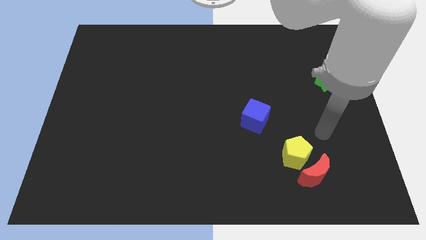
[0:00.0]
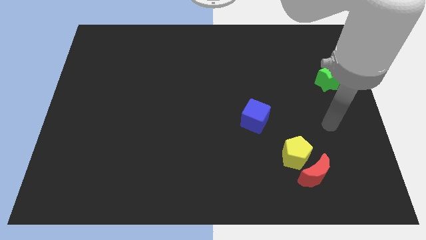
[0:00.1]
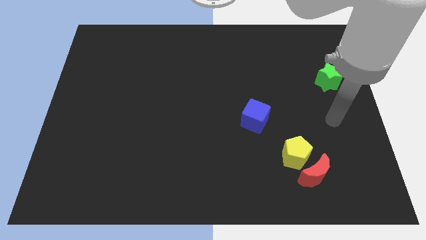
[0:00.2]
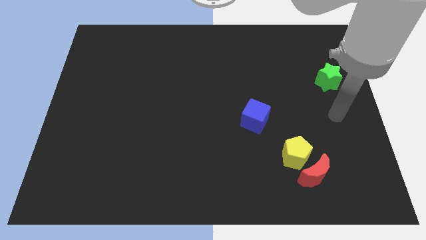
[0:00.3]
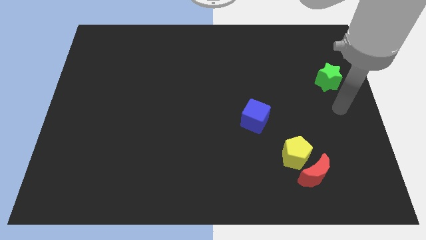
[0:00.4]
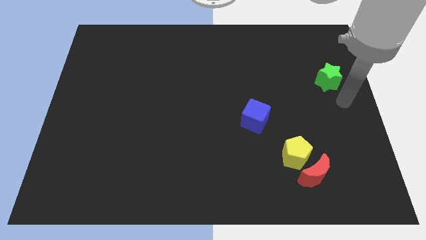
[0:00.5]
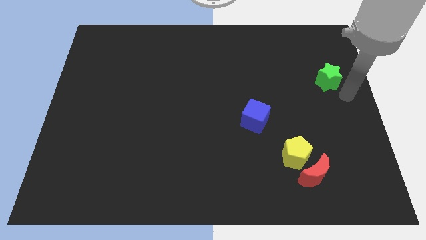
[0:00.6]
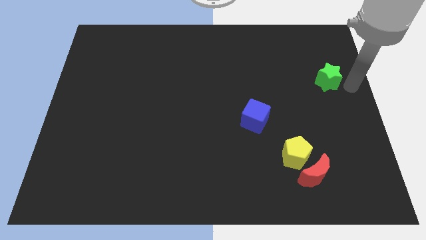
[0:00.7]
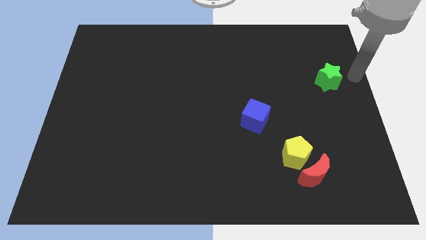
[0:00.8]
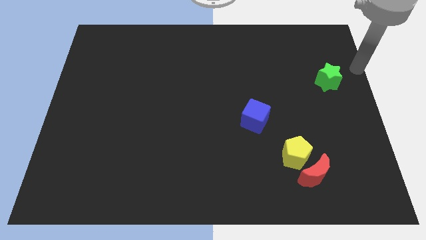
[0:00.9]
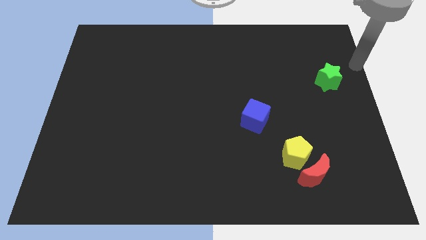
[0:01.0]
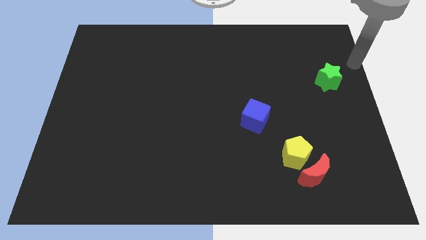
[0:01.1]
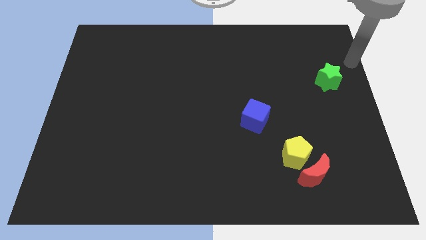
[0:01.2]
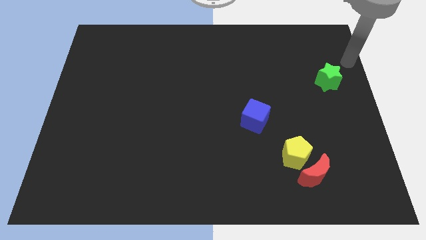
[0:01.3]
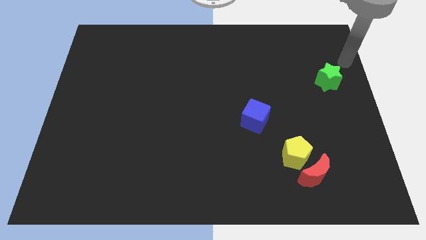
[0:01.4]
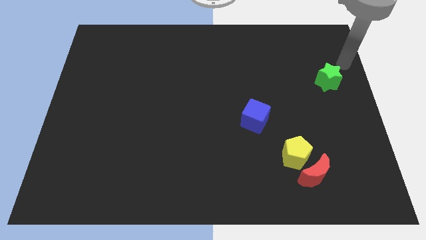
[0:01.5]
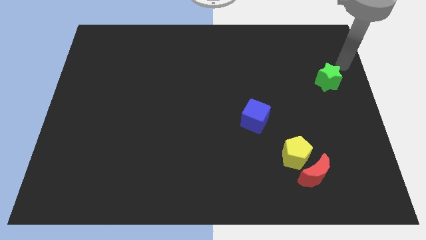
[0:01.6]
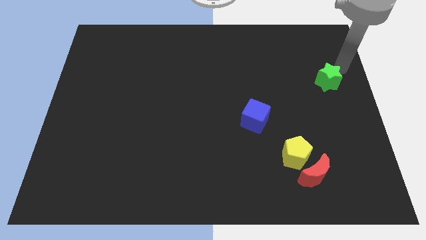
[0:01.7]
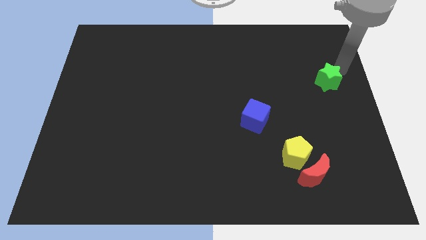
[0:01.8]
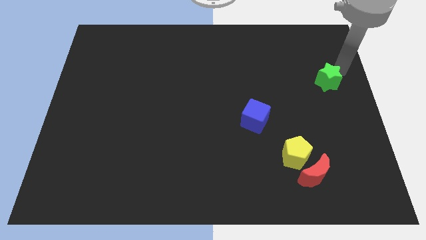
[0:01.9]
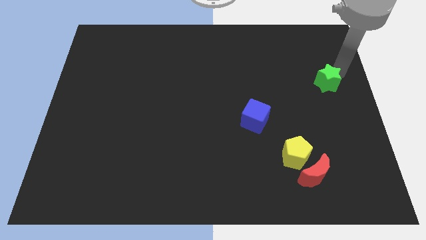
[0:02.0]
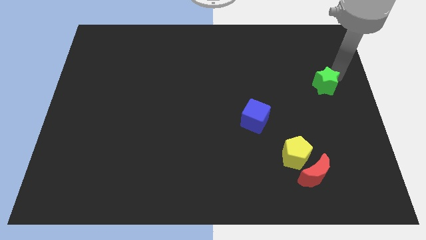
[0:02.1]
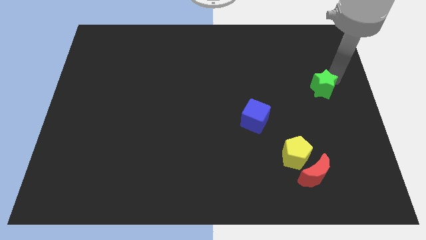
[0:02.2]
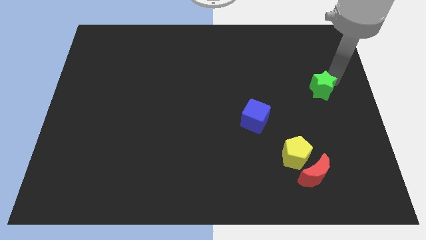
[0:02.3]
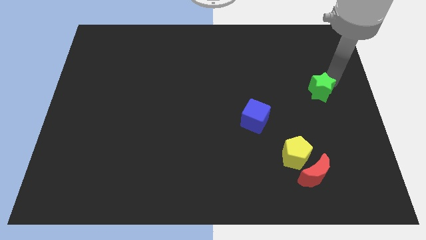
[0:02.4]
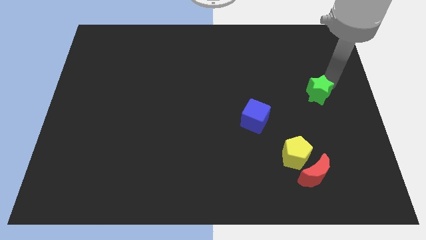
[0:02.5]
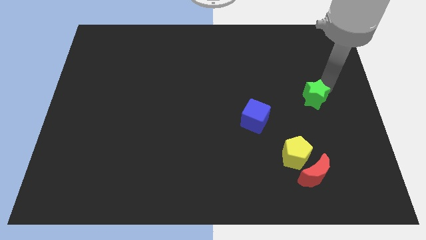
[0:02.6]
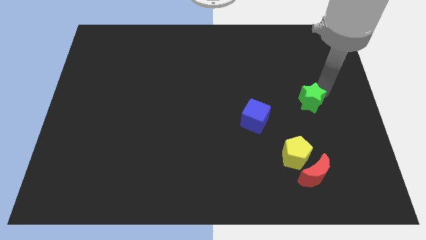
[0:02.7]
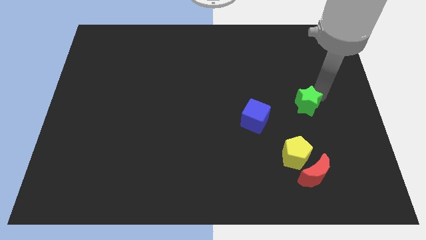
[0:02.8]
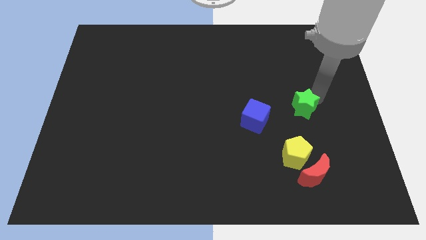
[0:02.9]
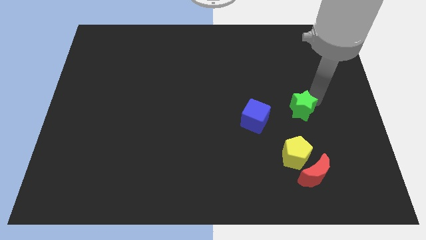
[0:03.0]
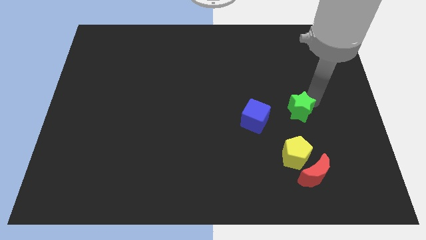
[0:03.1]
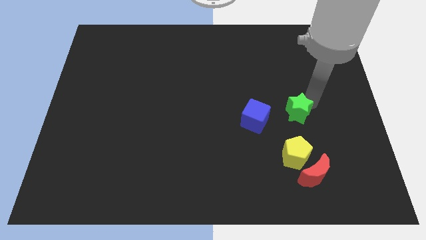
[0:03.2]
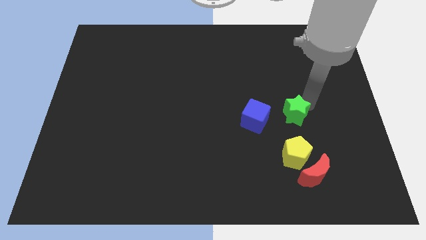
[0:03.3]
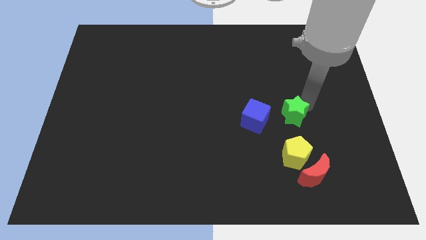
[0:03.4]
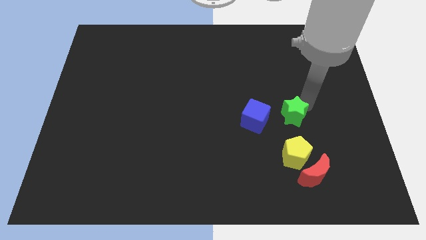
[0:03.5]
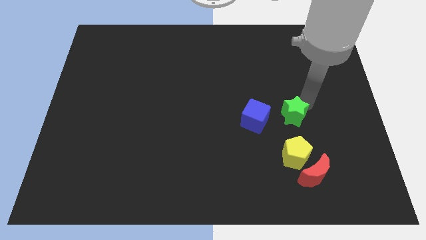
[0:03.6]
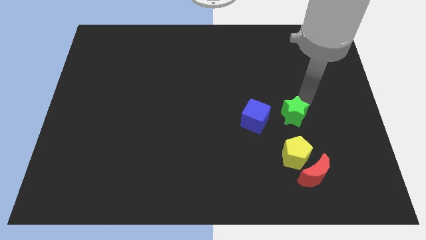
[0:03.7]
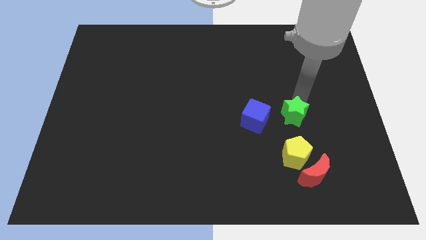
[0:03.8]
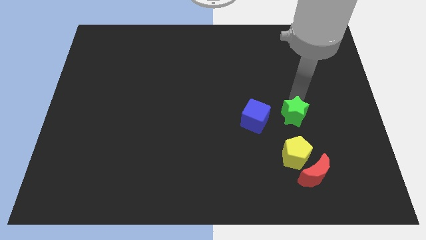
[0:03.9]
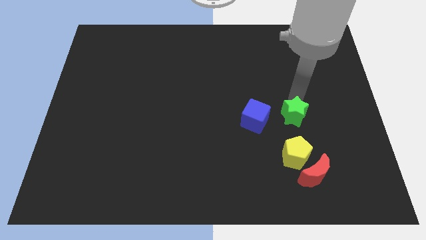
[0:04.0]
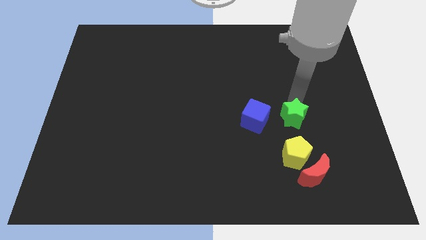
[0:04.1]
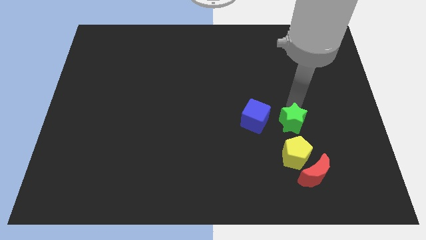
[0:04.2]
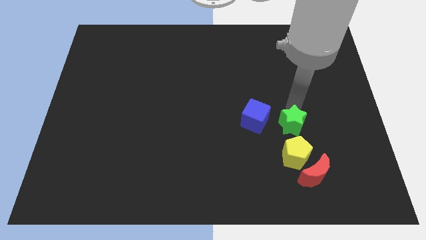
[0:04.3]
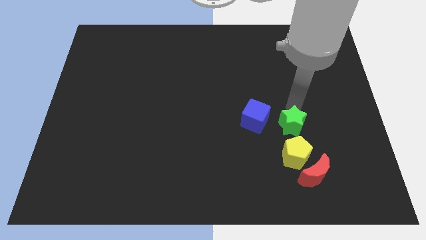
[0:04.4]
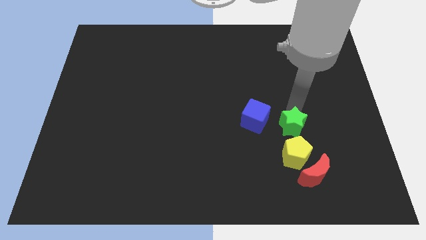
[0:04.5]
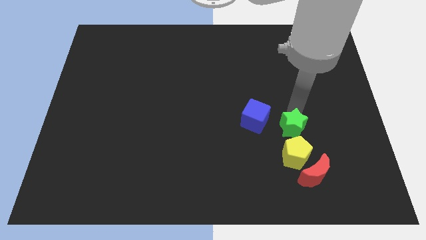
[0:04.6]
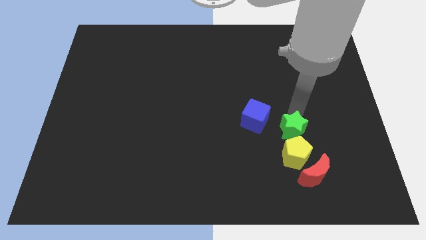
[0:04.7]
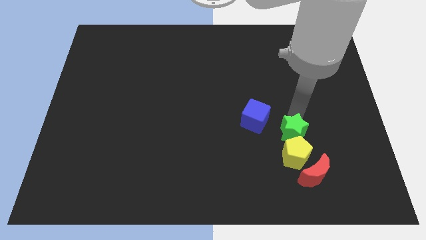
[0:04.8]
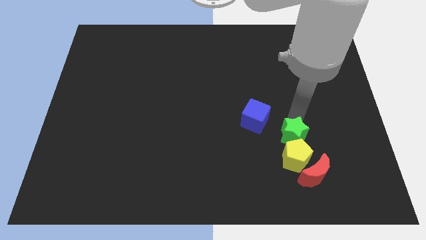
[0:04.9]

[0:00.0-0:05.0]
put the green block close to the yellow block

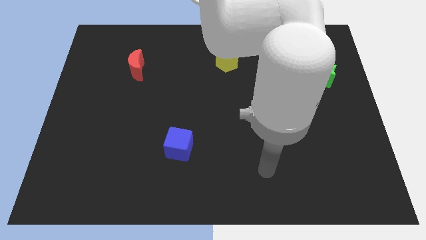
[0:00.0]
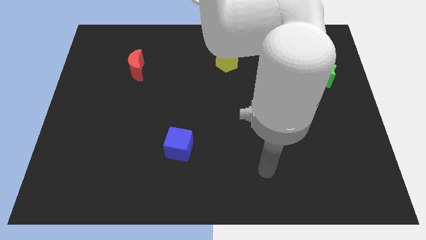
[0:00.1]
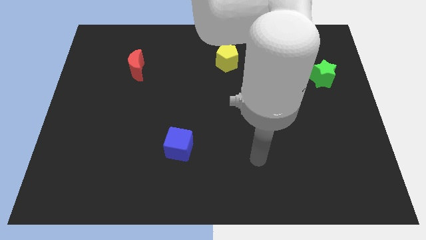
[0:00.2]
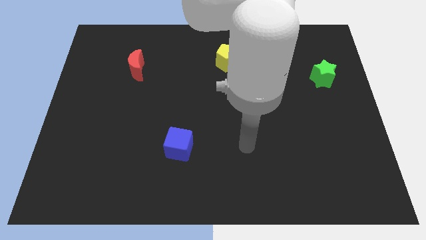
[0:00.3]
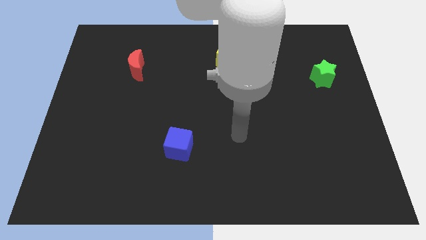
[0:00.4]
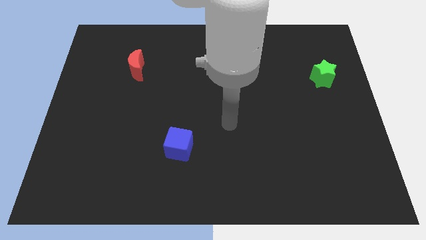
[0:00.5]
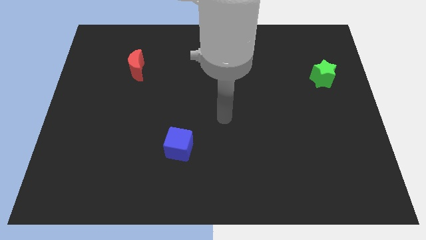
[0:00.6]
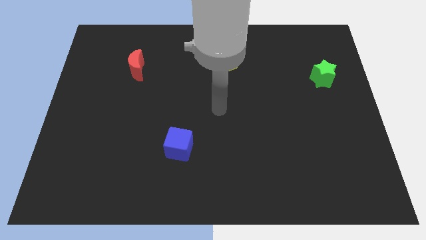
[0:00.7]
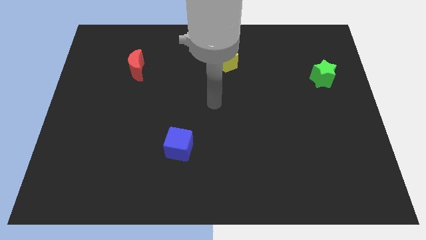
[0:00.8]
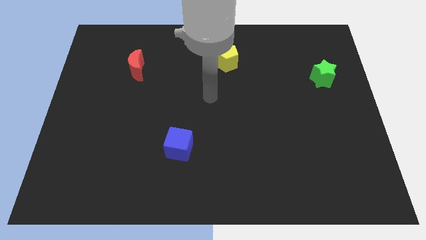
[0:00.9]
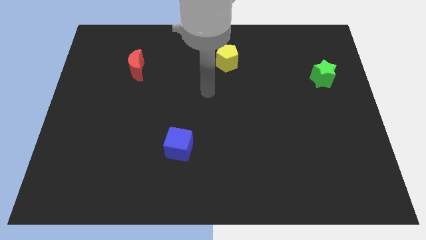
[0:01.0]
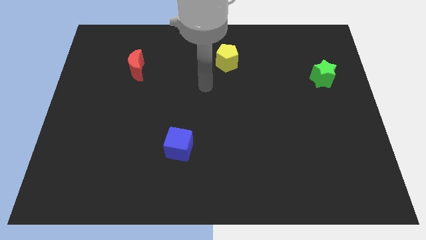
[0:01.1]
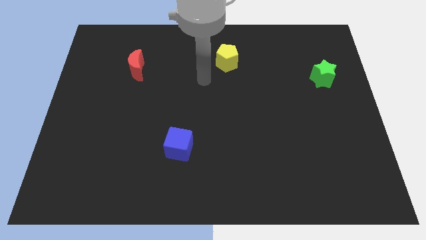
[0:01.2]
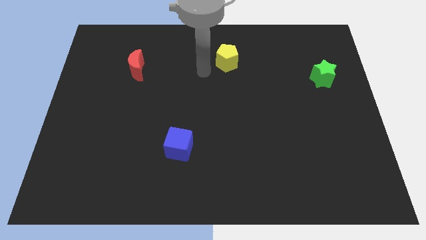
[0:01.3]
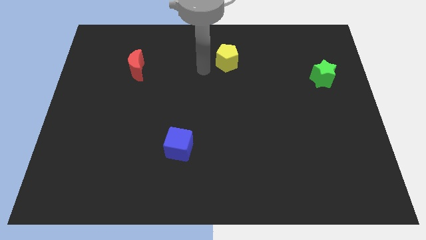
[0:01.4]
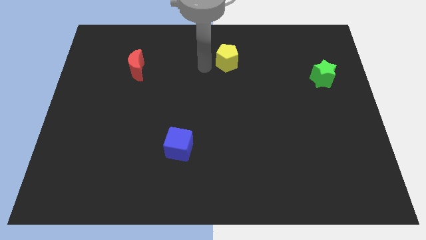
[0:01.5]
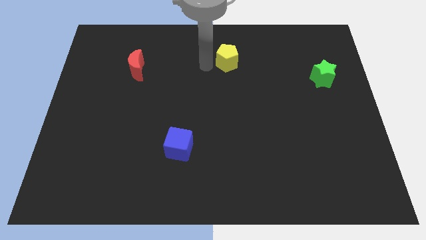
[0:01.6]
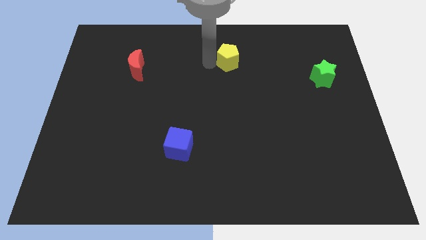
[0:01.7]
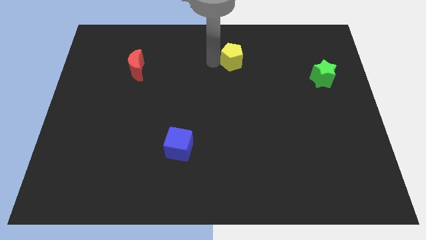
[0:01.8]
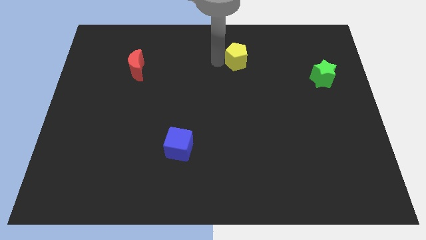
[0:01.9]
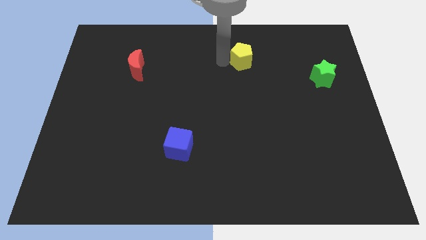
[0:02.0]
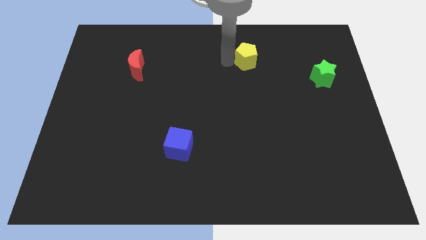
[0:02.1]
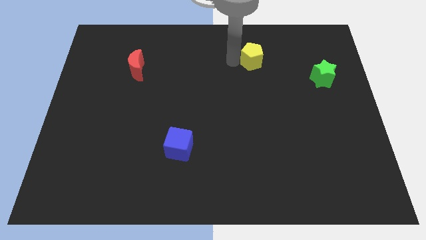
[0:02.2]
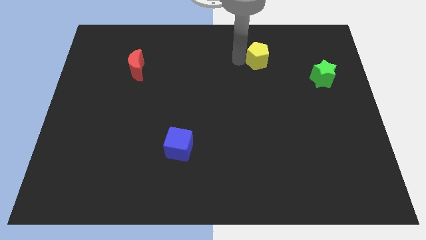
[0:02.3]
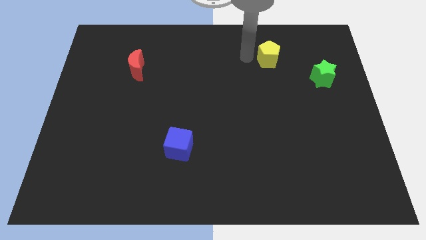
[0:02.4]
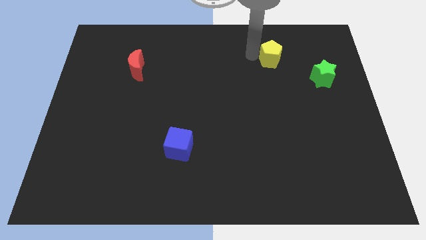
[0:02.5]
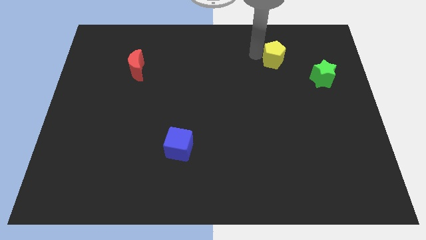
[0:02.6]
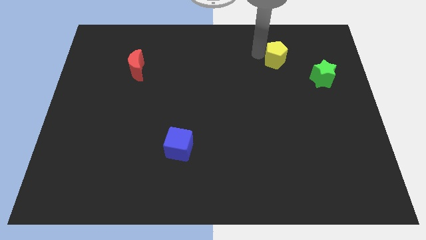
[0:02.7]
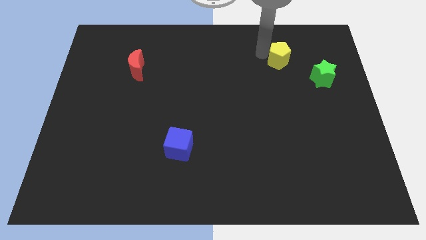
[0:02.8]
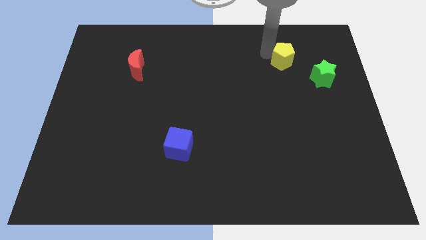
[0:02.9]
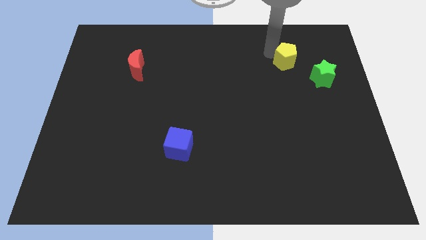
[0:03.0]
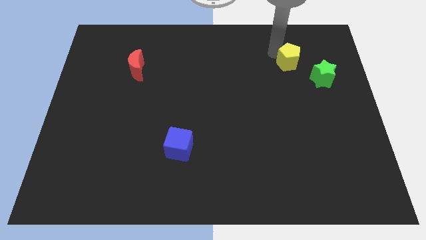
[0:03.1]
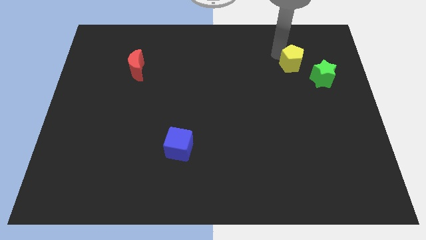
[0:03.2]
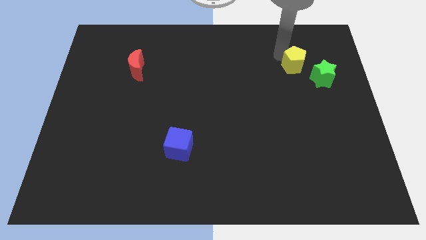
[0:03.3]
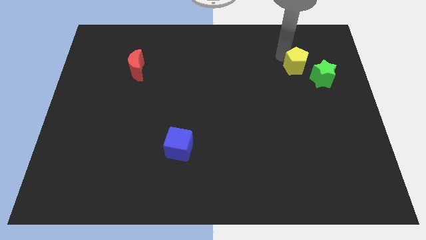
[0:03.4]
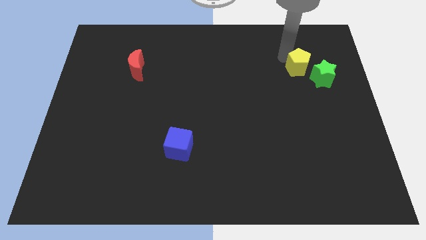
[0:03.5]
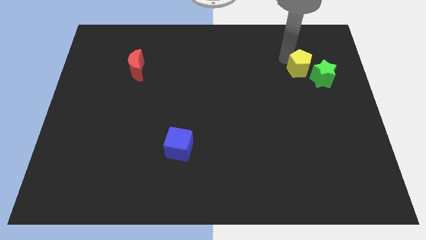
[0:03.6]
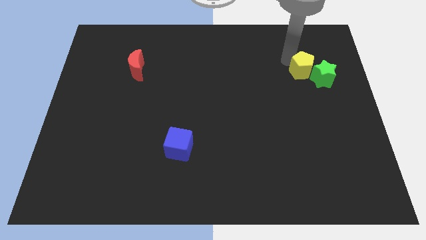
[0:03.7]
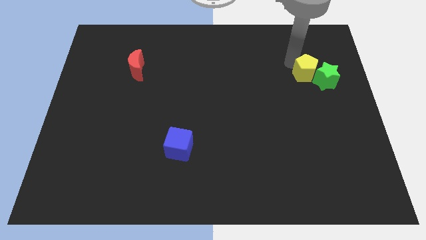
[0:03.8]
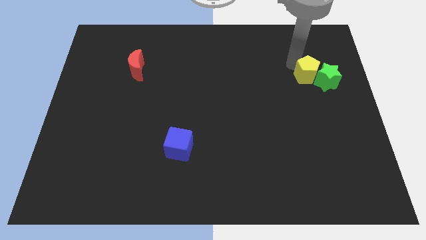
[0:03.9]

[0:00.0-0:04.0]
move the yellow block to the green star

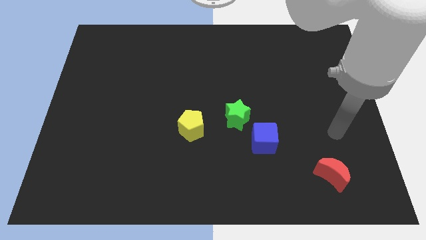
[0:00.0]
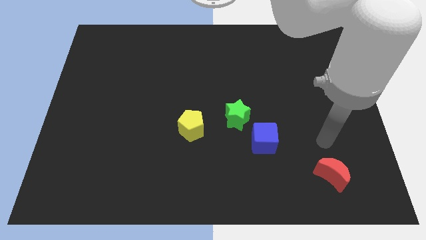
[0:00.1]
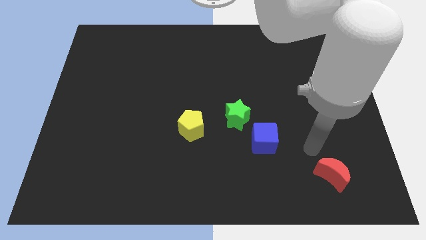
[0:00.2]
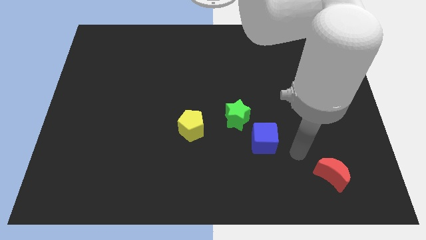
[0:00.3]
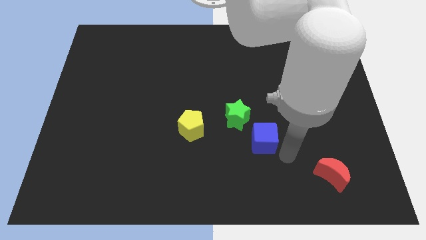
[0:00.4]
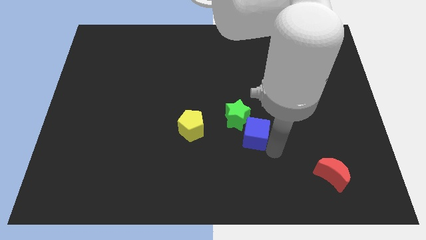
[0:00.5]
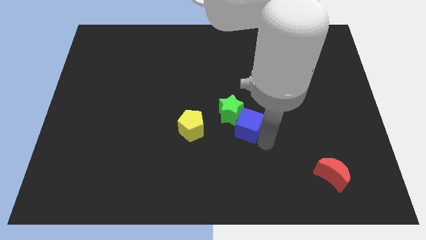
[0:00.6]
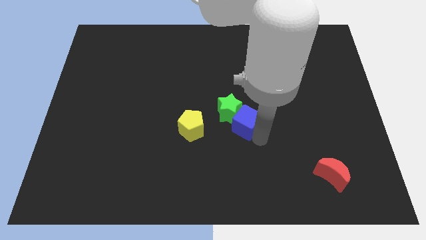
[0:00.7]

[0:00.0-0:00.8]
push the blue block close to the green block
